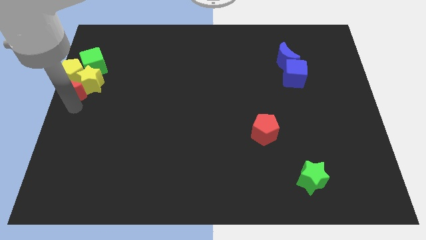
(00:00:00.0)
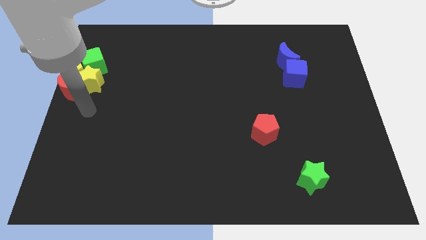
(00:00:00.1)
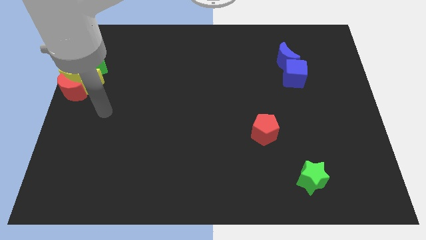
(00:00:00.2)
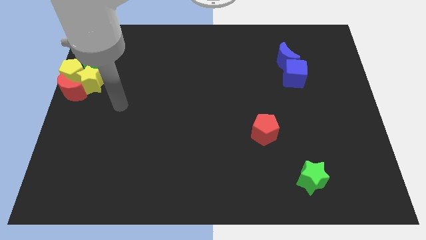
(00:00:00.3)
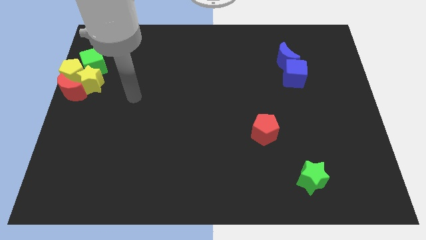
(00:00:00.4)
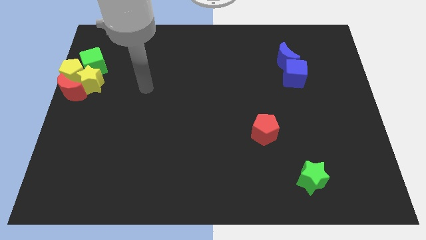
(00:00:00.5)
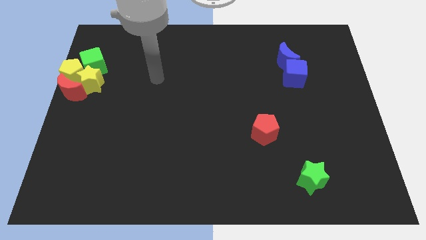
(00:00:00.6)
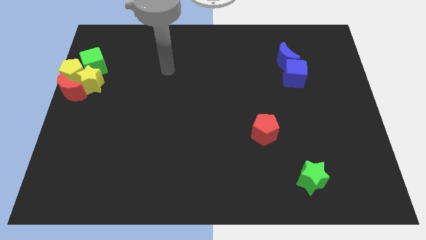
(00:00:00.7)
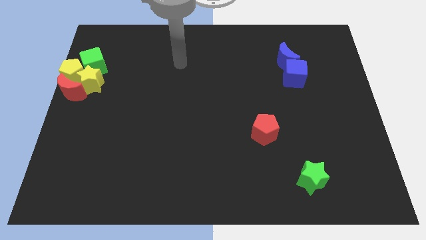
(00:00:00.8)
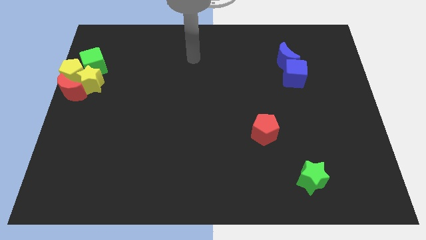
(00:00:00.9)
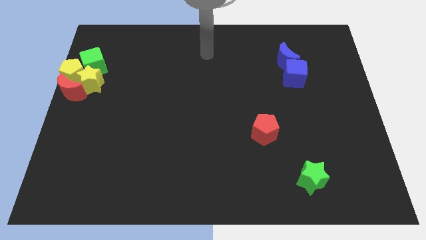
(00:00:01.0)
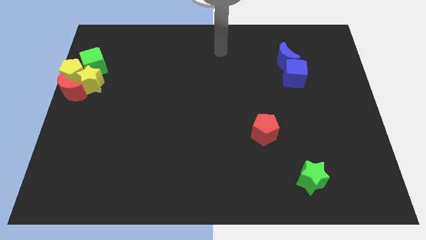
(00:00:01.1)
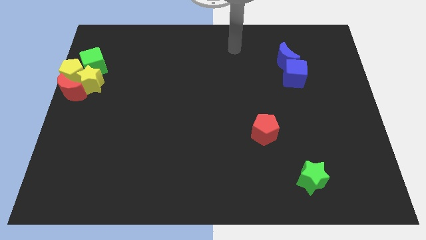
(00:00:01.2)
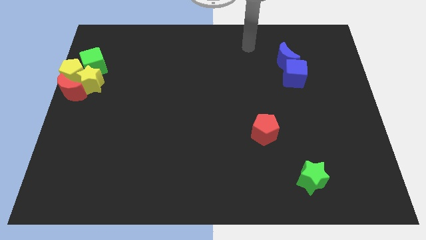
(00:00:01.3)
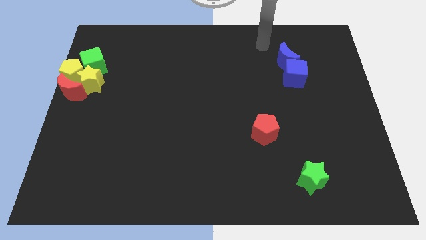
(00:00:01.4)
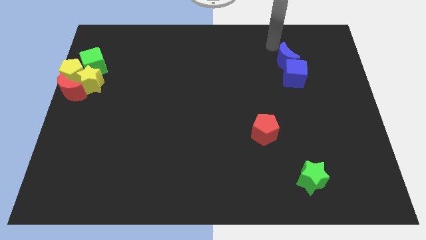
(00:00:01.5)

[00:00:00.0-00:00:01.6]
move your arm away from the red moon

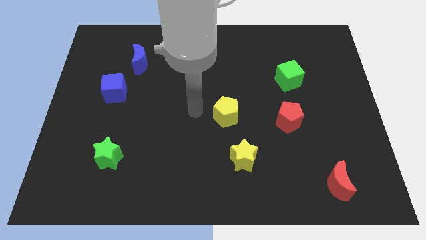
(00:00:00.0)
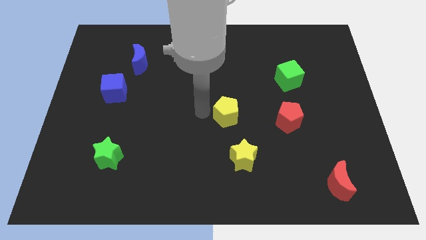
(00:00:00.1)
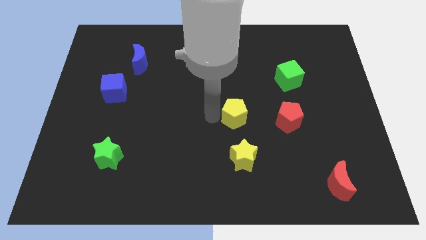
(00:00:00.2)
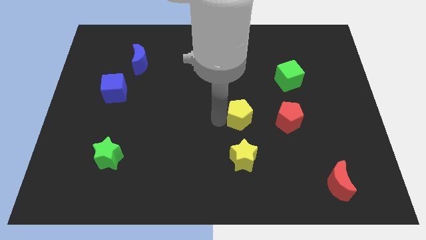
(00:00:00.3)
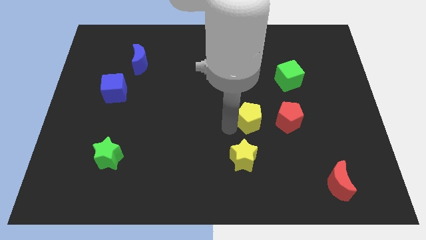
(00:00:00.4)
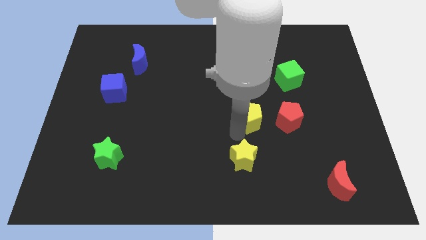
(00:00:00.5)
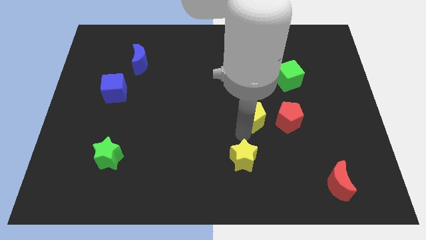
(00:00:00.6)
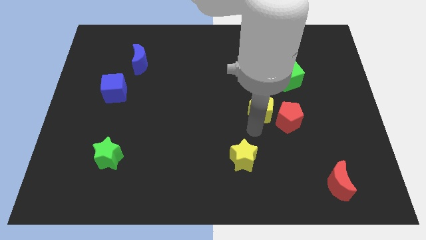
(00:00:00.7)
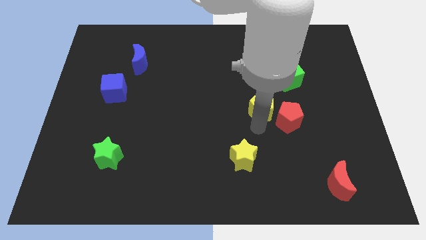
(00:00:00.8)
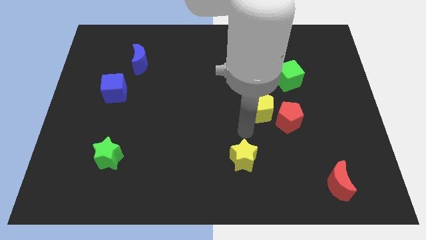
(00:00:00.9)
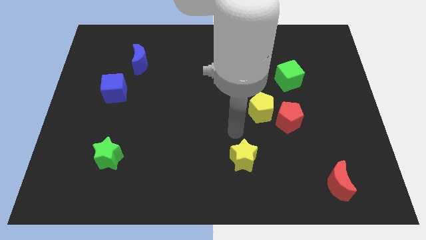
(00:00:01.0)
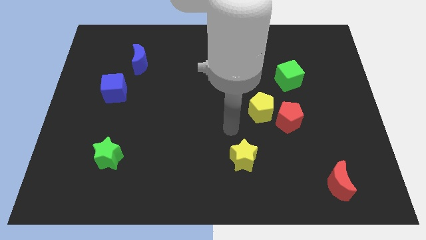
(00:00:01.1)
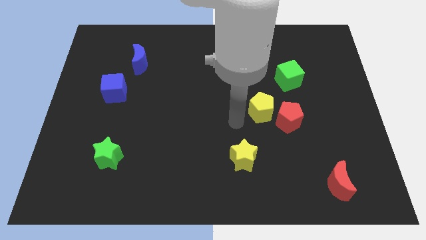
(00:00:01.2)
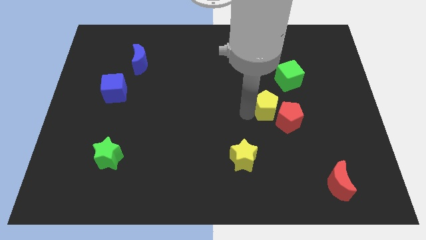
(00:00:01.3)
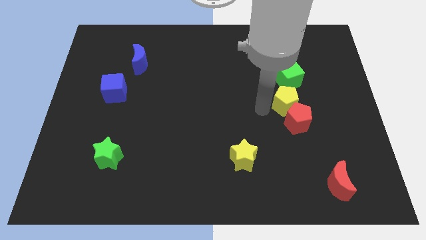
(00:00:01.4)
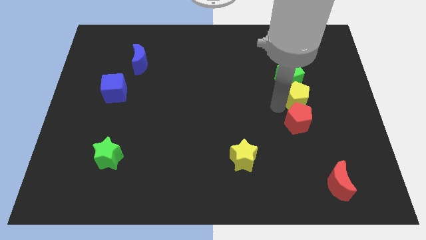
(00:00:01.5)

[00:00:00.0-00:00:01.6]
move the yellow pentagon between red pentagon and green cube

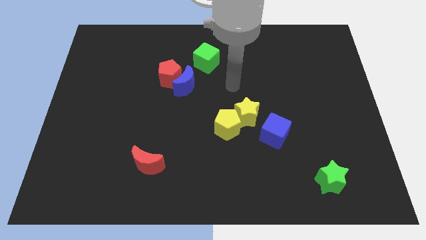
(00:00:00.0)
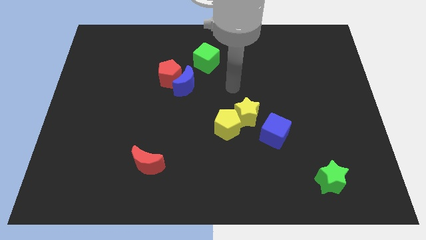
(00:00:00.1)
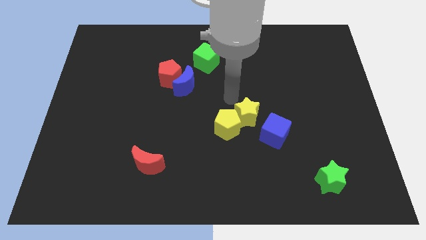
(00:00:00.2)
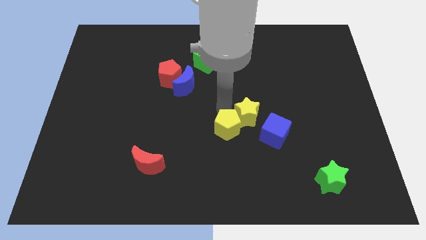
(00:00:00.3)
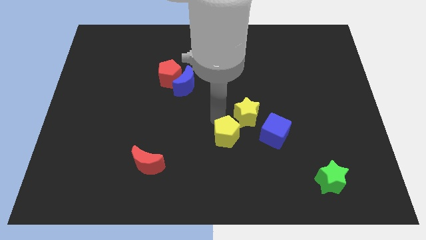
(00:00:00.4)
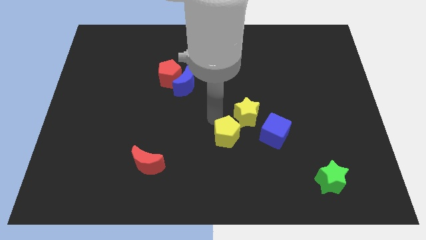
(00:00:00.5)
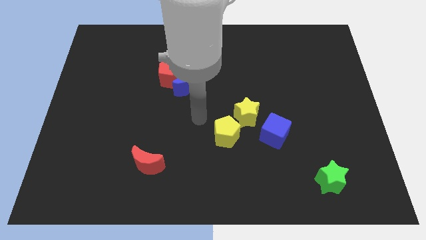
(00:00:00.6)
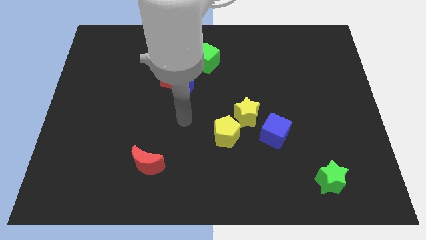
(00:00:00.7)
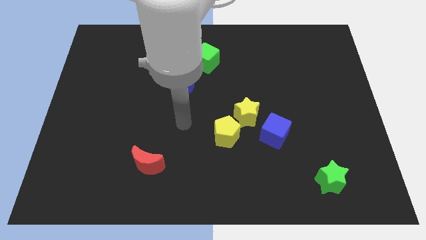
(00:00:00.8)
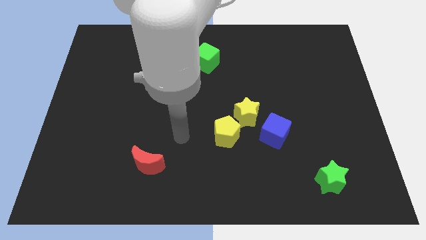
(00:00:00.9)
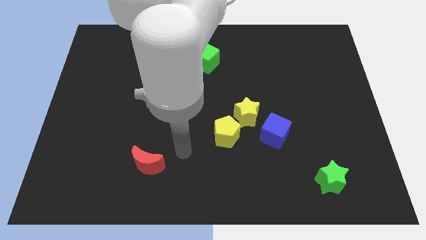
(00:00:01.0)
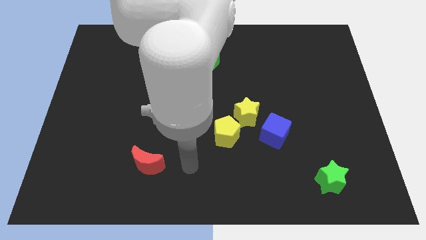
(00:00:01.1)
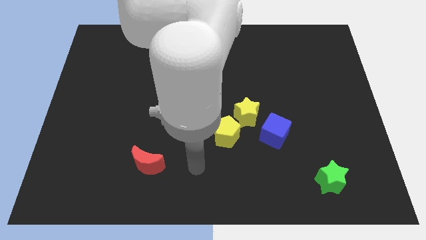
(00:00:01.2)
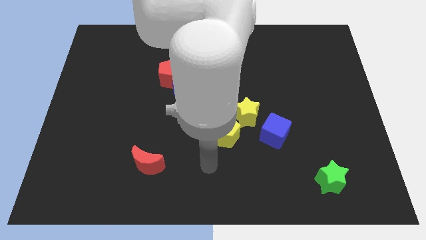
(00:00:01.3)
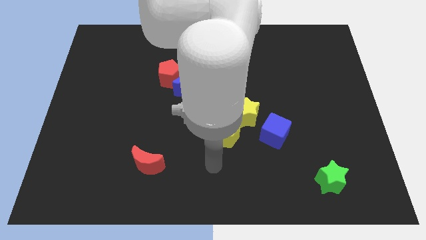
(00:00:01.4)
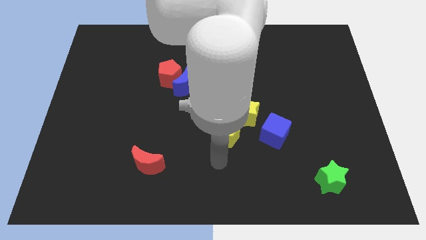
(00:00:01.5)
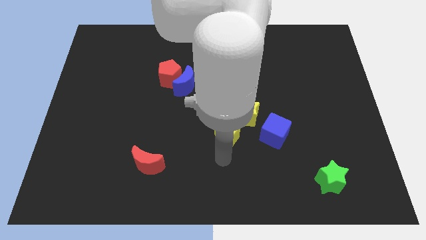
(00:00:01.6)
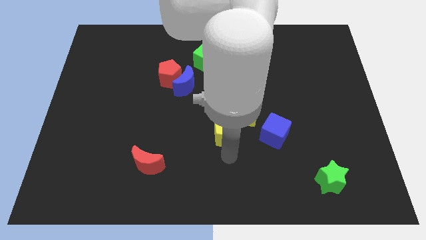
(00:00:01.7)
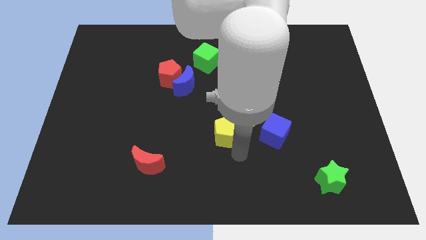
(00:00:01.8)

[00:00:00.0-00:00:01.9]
place your hand vertically below the yellow pentagon

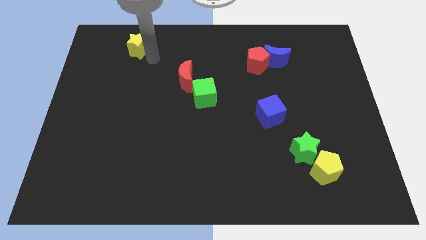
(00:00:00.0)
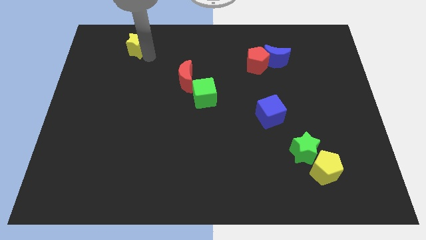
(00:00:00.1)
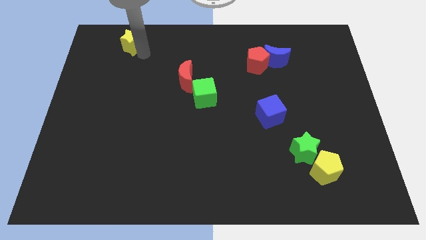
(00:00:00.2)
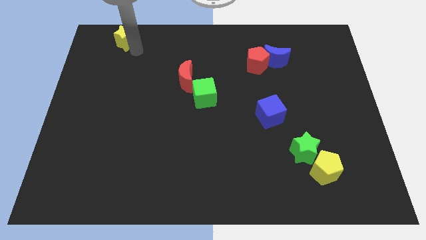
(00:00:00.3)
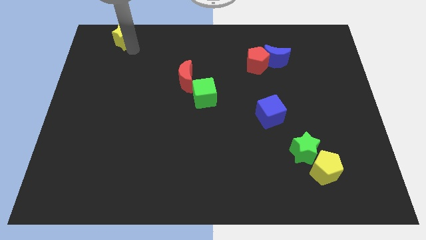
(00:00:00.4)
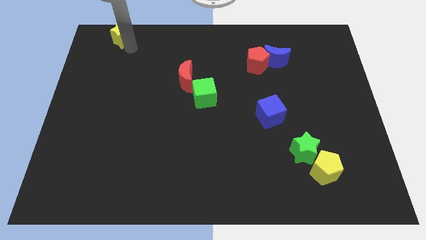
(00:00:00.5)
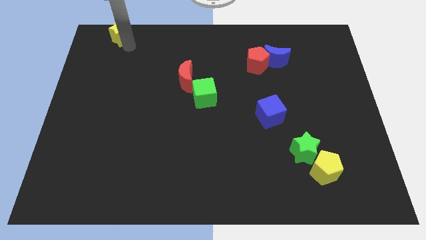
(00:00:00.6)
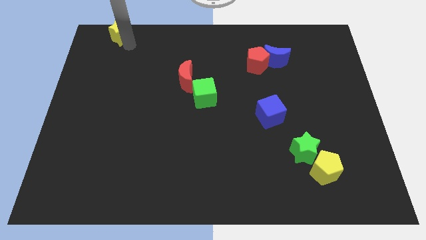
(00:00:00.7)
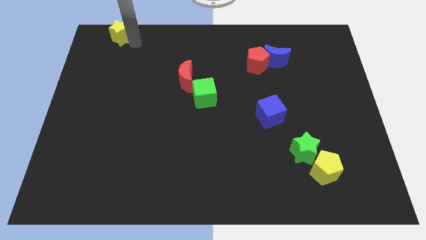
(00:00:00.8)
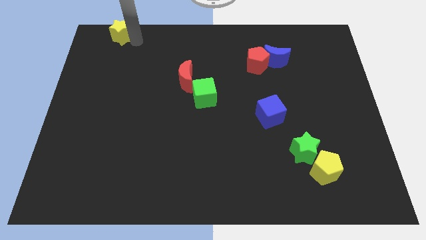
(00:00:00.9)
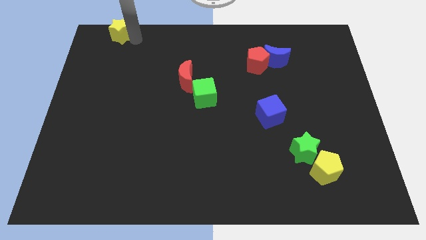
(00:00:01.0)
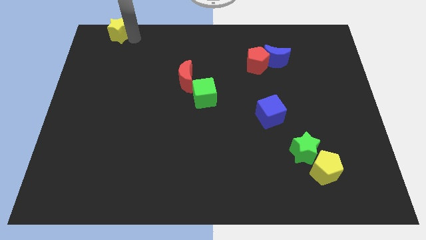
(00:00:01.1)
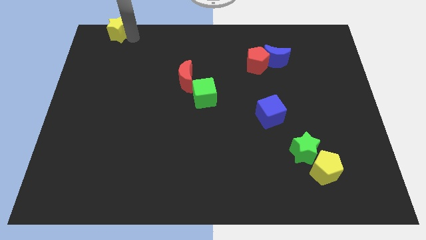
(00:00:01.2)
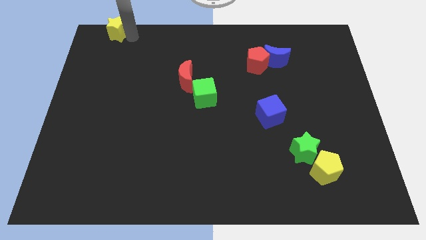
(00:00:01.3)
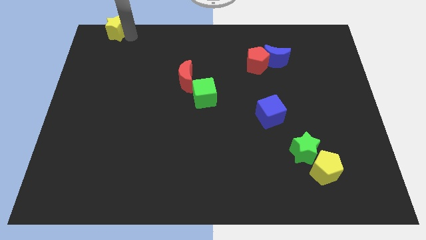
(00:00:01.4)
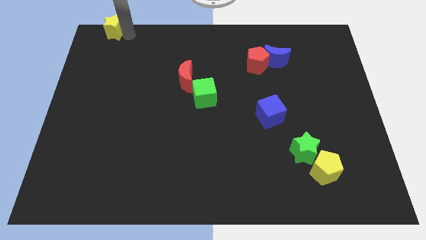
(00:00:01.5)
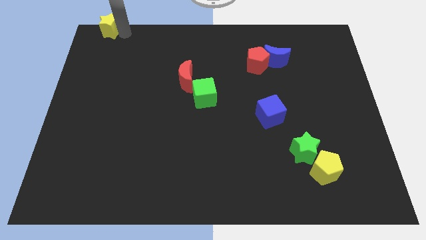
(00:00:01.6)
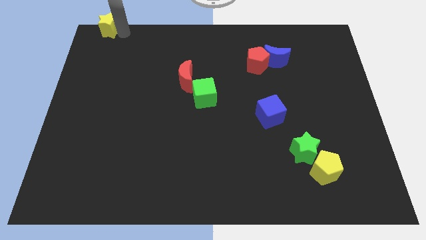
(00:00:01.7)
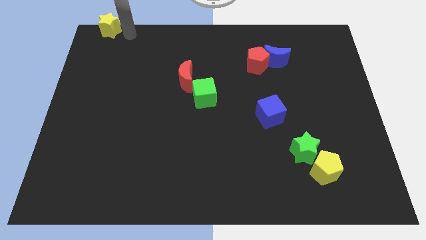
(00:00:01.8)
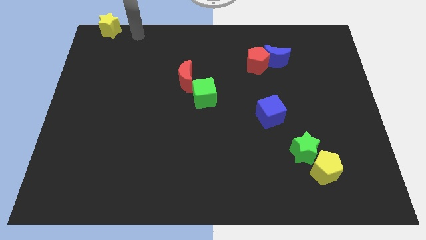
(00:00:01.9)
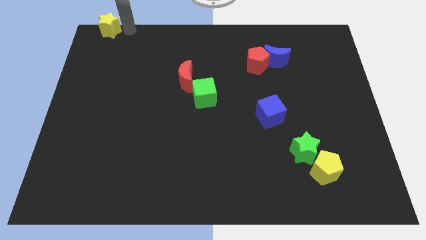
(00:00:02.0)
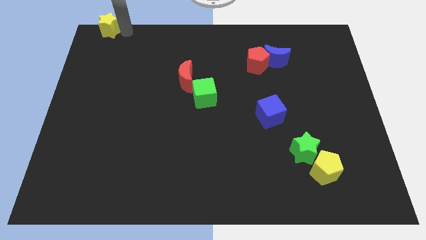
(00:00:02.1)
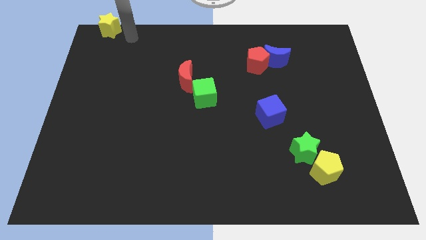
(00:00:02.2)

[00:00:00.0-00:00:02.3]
move the yellow star towards the top left side of the board

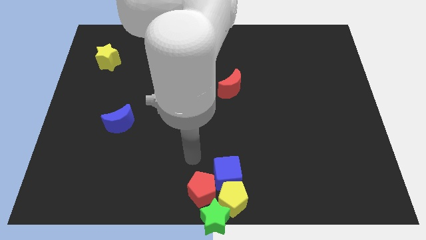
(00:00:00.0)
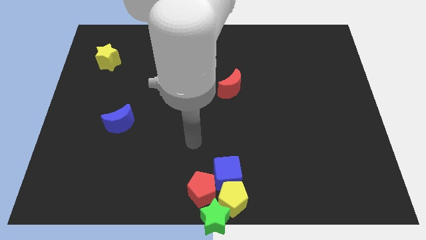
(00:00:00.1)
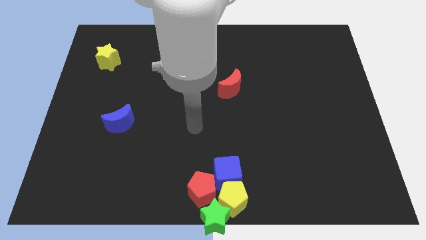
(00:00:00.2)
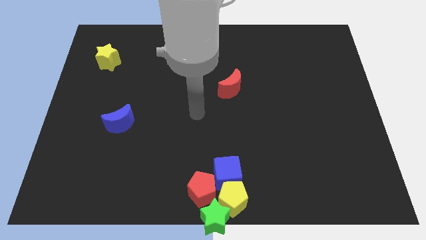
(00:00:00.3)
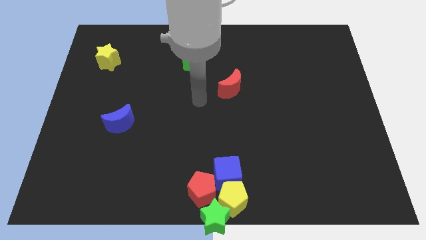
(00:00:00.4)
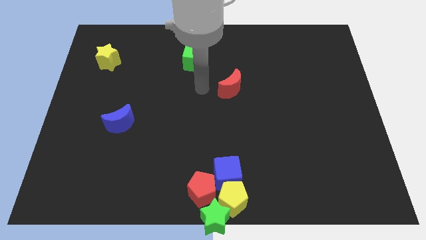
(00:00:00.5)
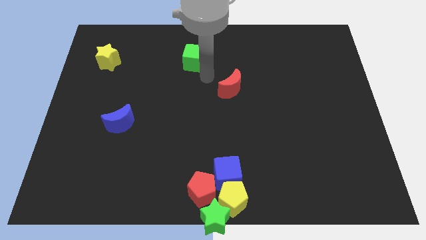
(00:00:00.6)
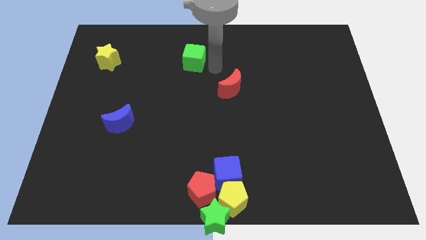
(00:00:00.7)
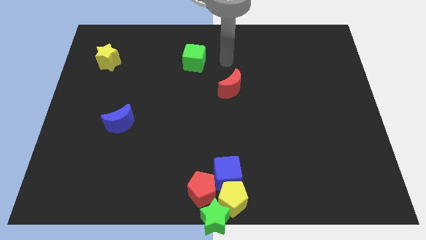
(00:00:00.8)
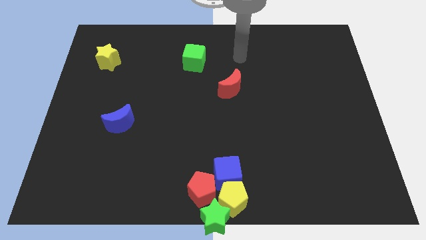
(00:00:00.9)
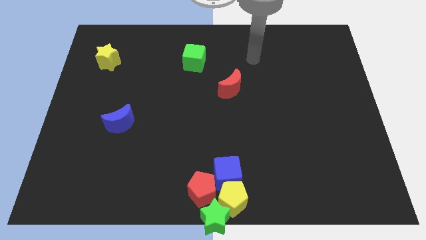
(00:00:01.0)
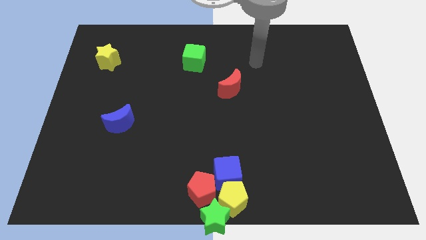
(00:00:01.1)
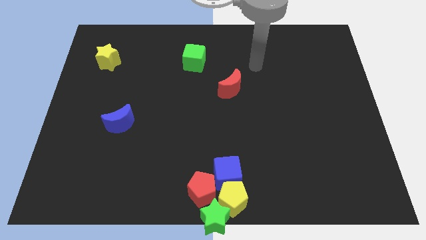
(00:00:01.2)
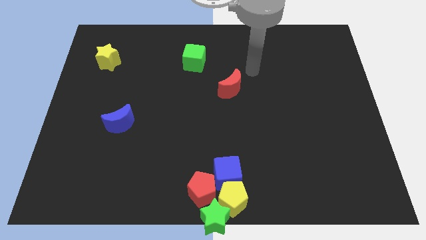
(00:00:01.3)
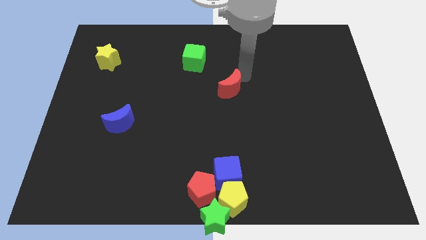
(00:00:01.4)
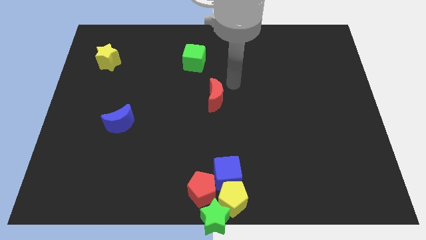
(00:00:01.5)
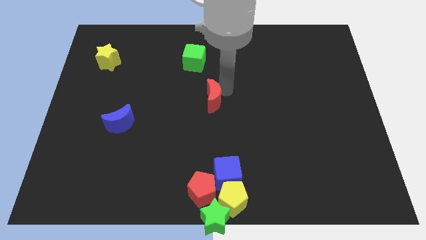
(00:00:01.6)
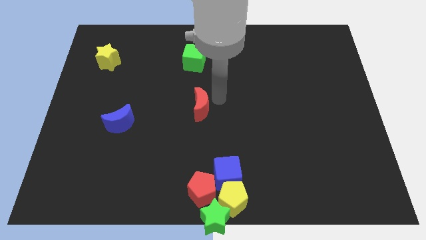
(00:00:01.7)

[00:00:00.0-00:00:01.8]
place the red moon below the green cube
